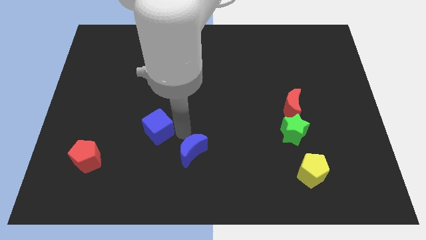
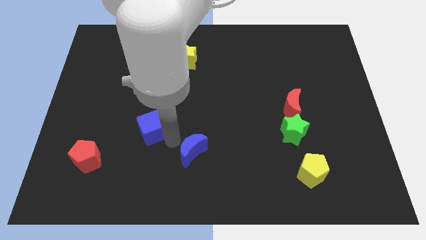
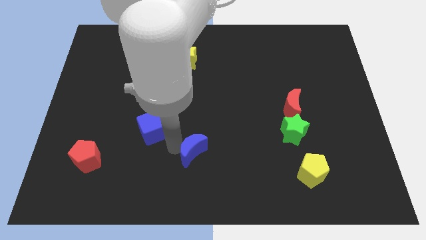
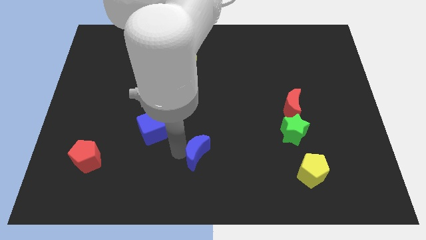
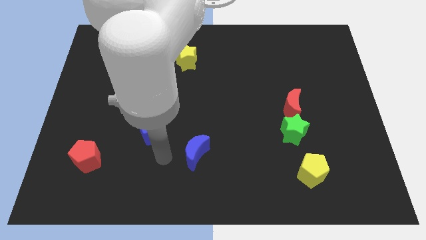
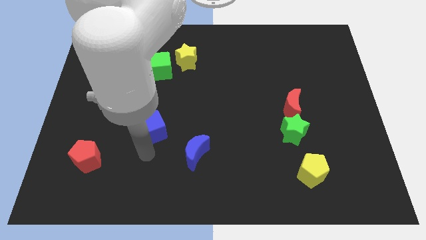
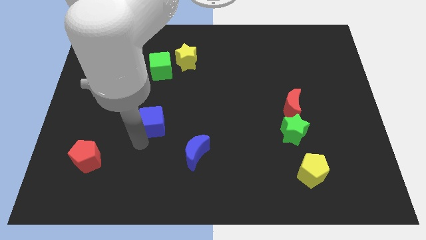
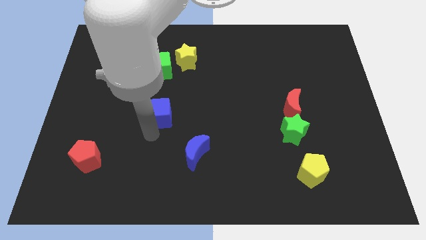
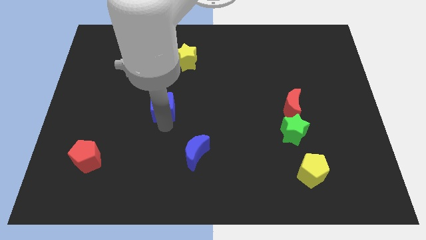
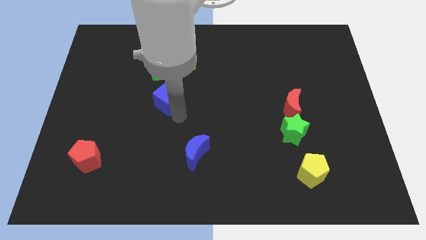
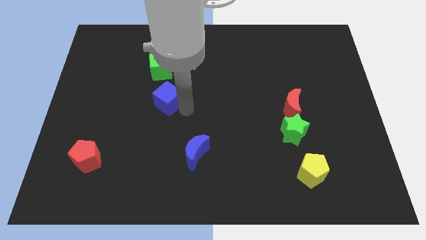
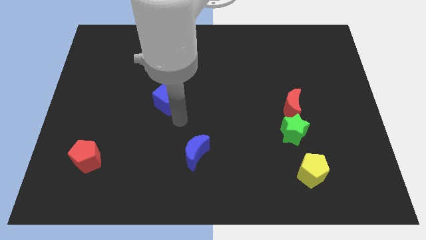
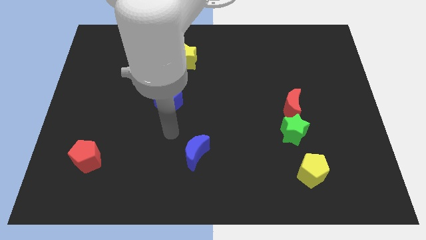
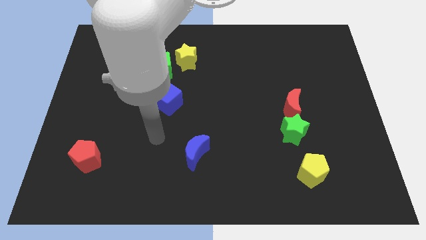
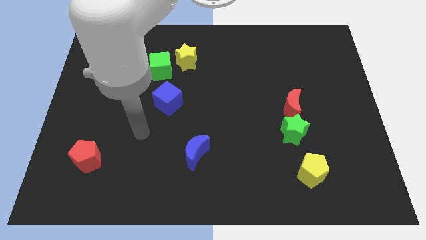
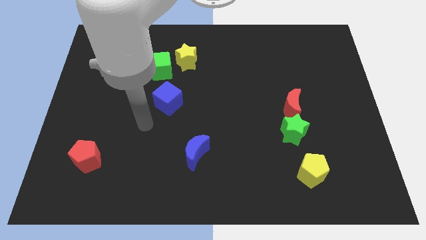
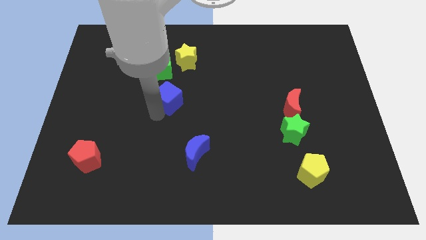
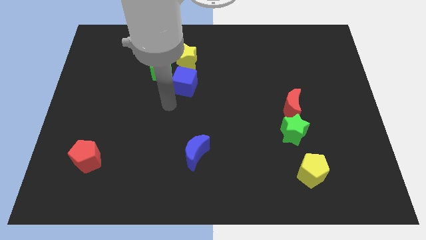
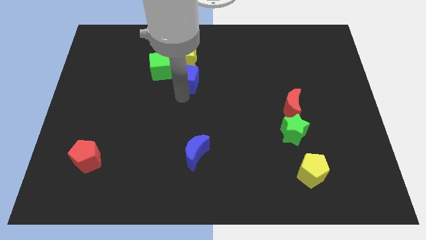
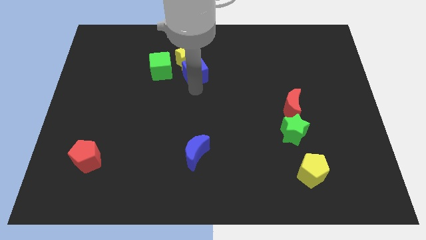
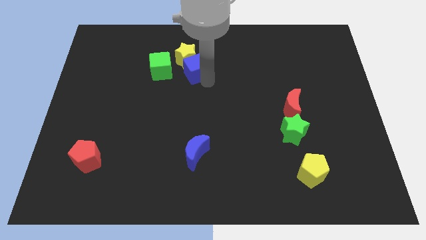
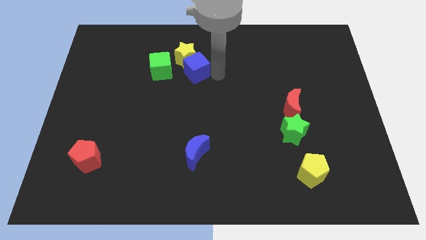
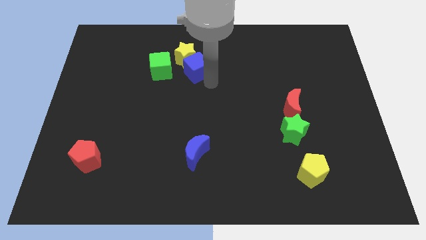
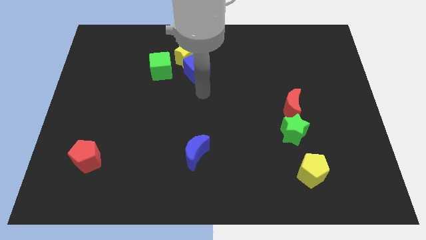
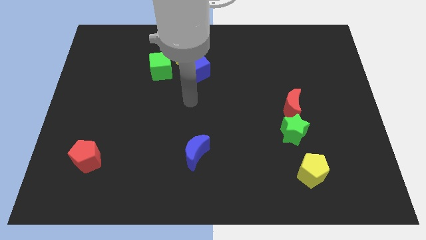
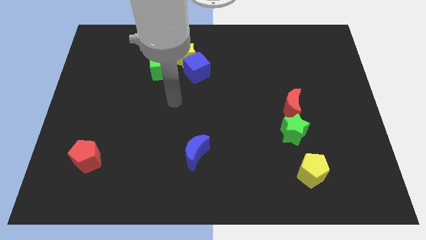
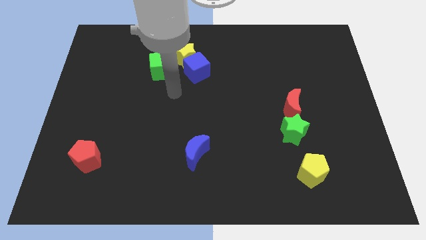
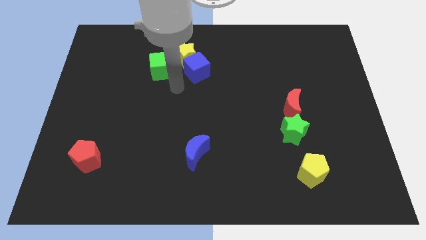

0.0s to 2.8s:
push the blue cube into the yellow star

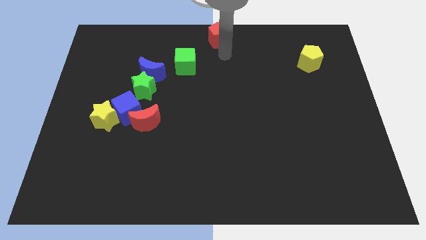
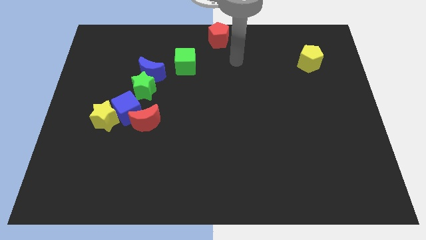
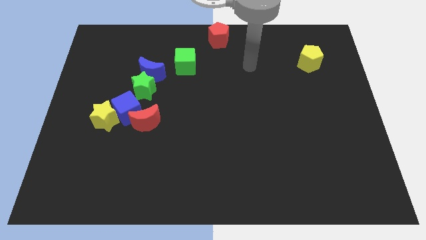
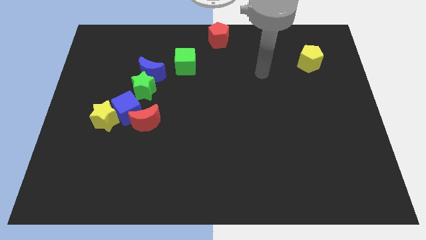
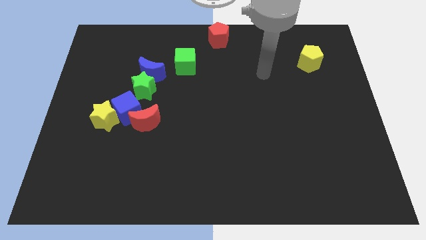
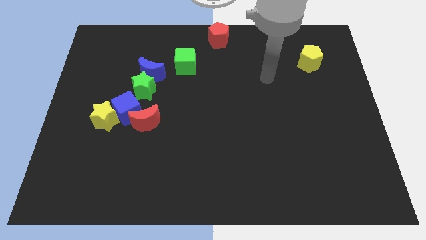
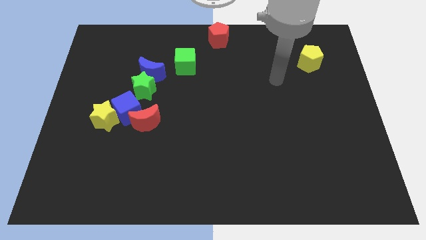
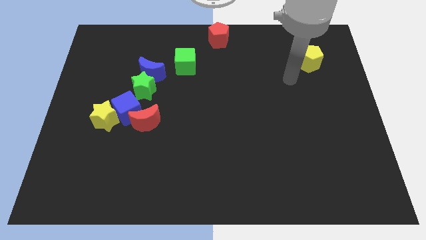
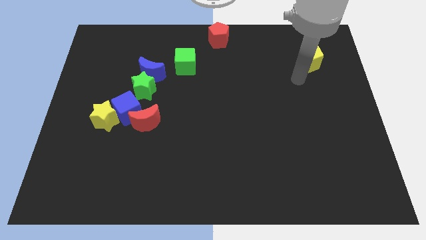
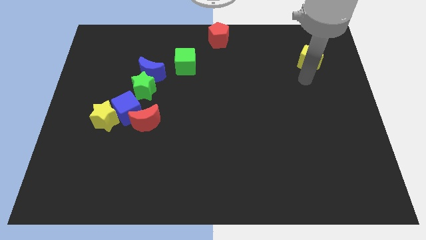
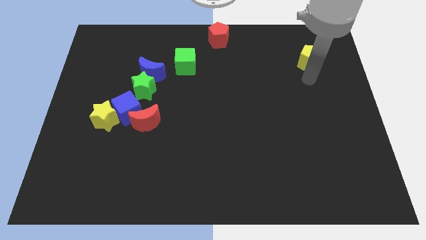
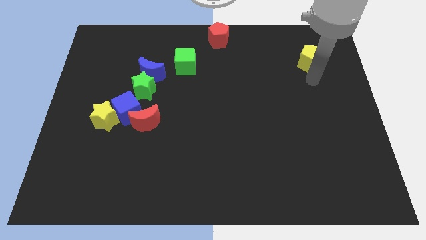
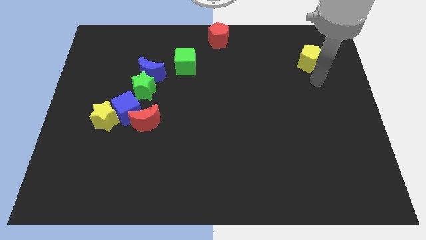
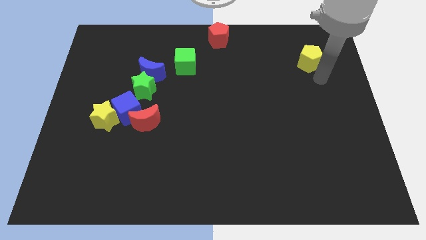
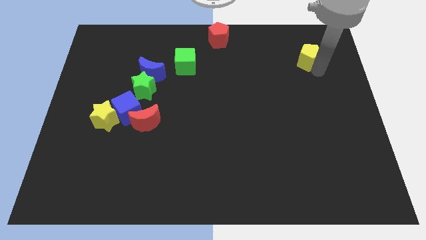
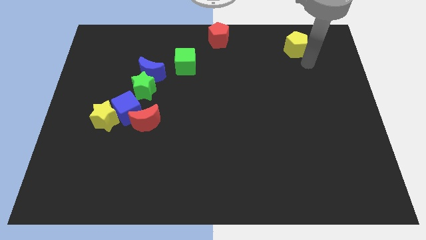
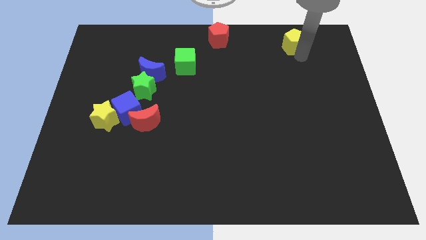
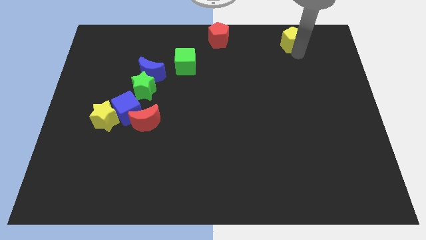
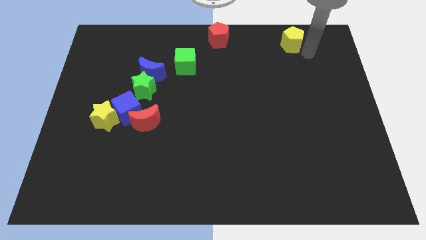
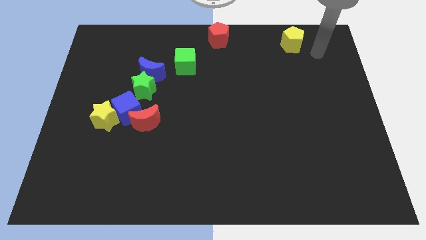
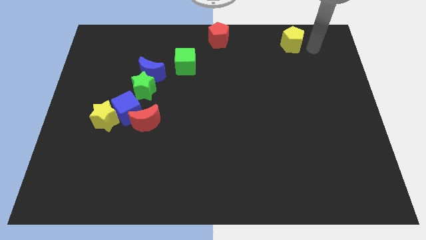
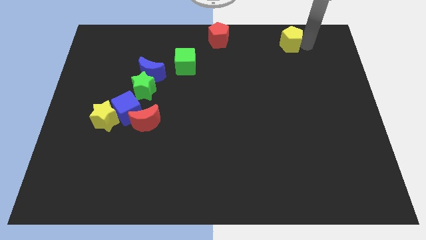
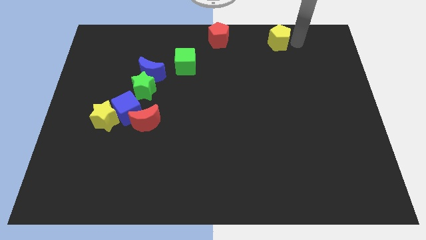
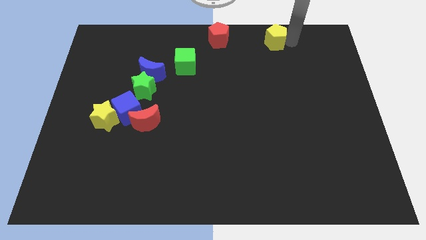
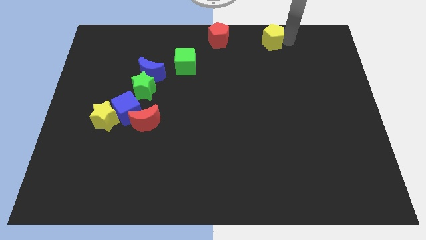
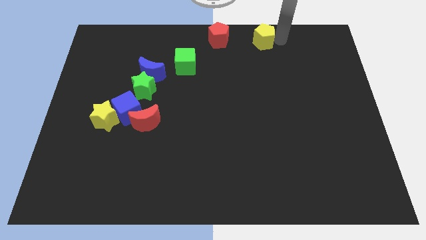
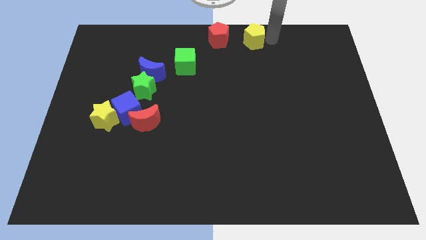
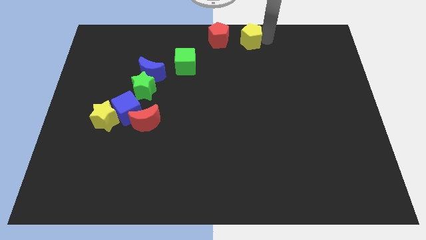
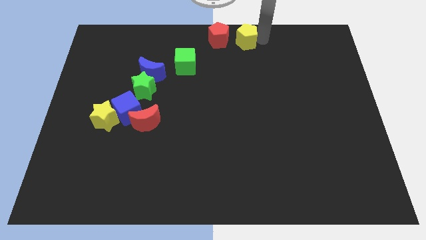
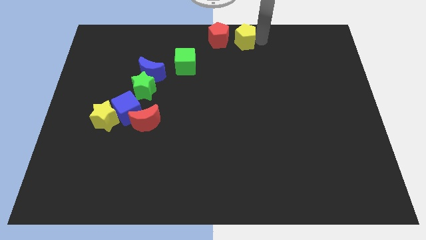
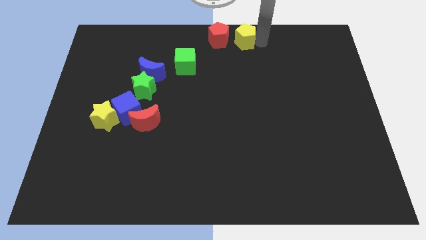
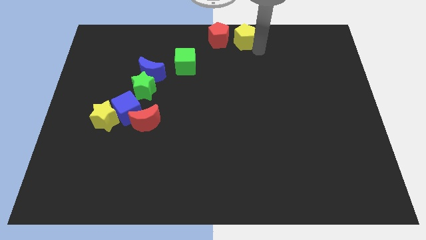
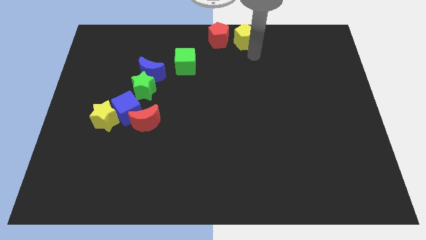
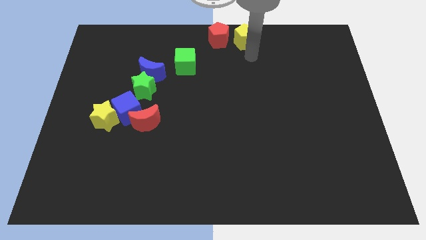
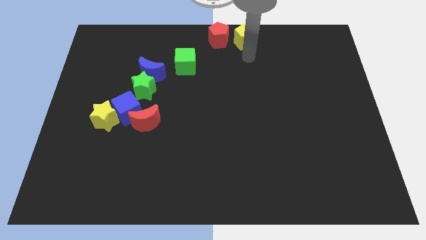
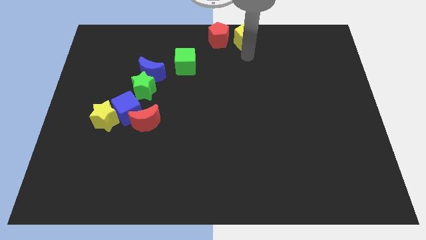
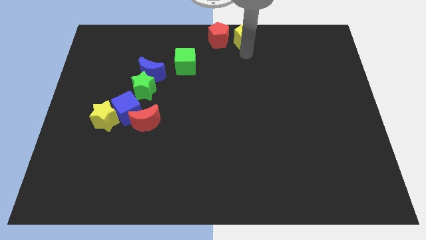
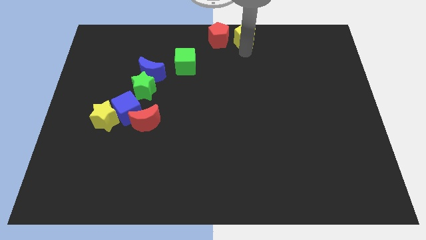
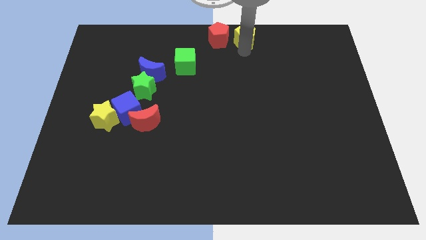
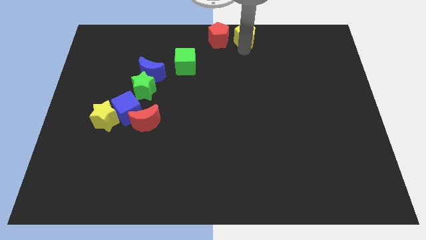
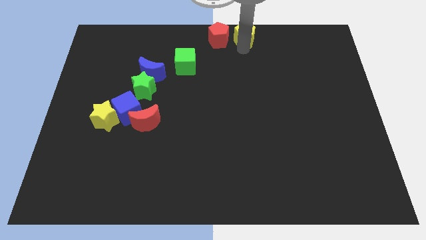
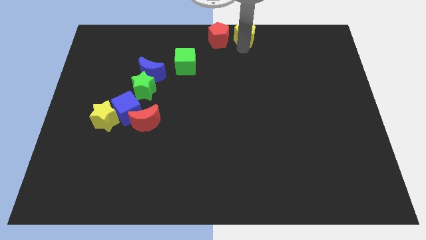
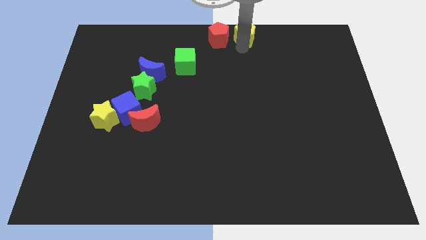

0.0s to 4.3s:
place the yellow pentagon to the right side of the red pentagon

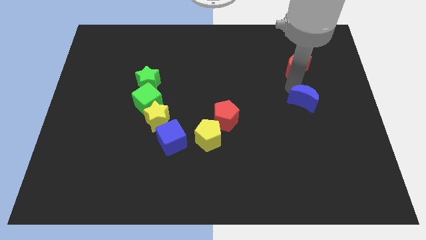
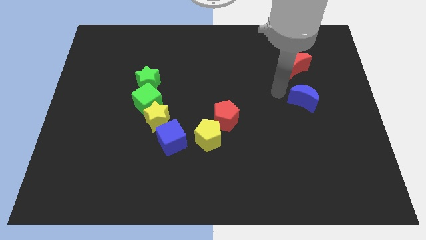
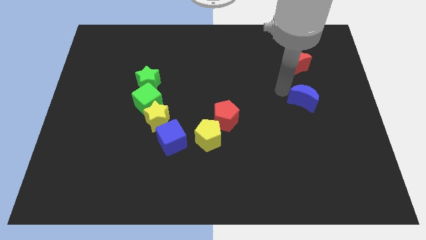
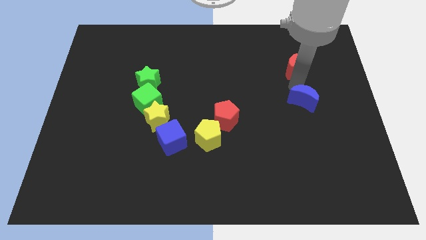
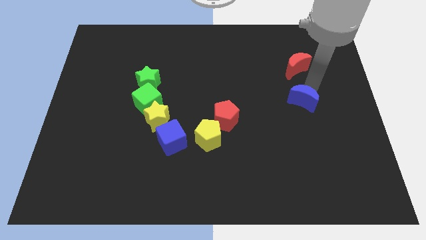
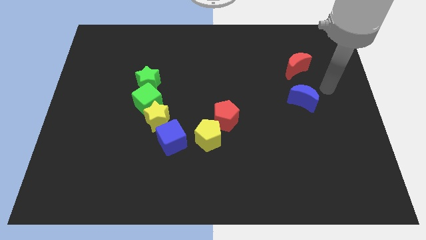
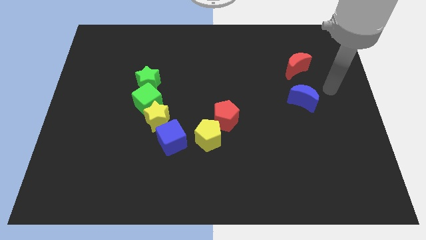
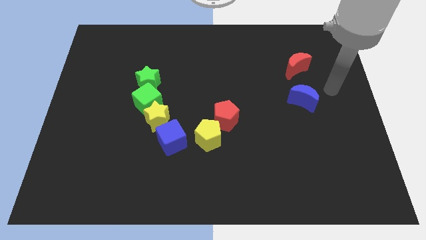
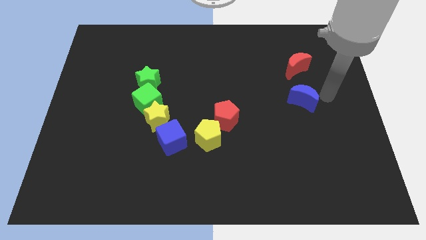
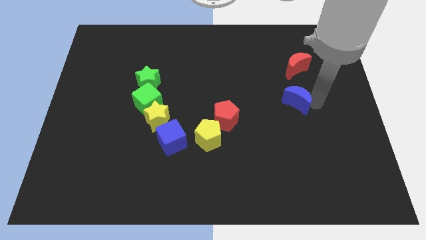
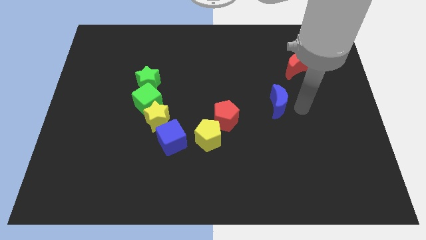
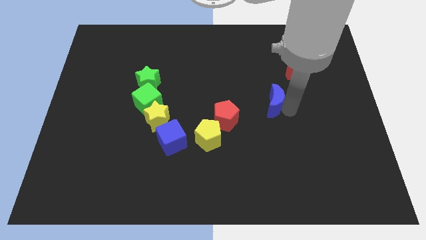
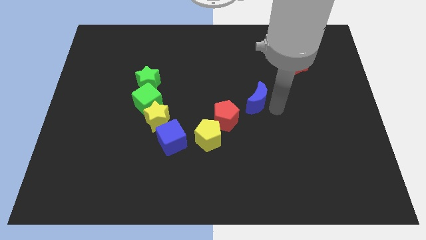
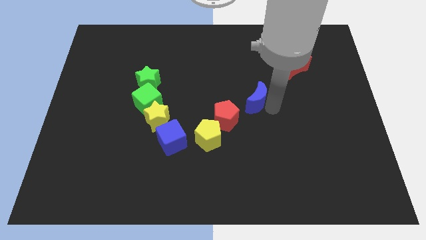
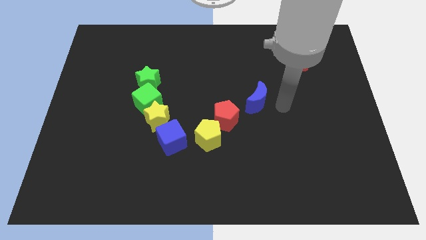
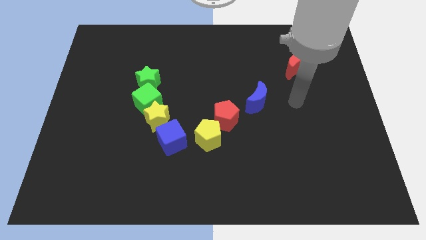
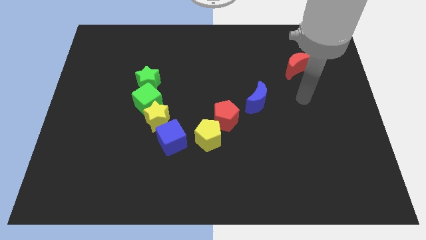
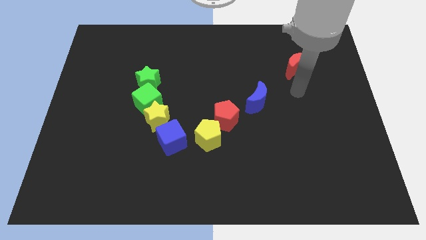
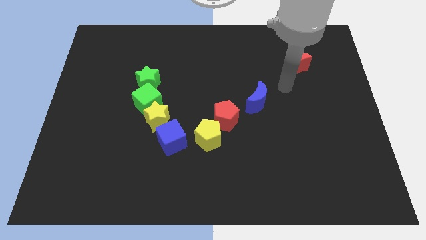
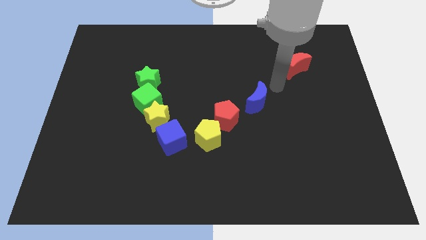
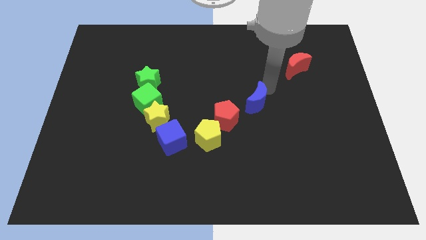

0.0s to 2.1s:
slide the blue crescent diagonal to red crescent
